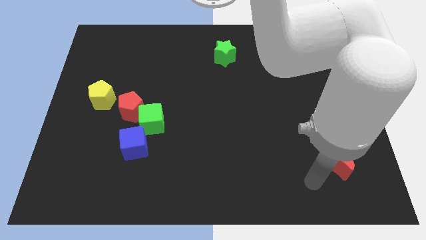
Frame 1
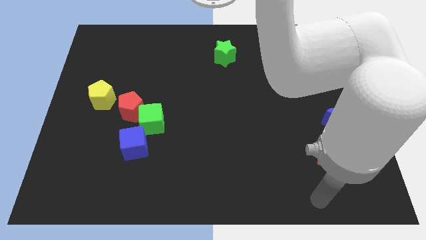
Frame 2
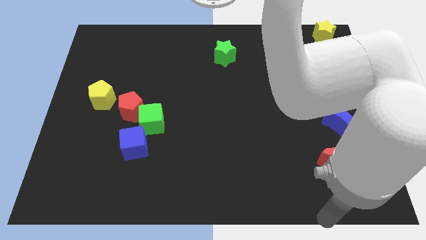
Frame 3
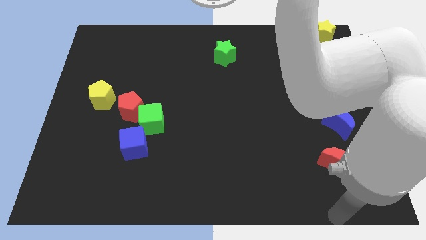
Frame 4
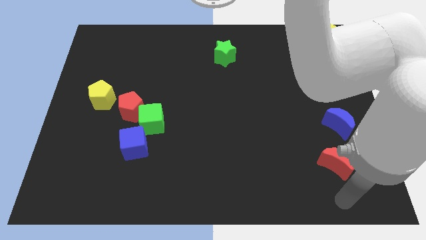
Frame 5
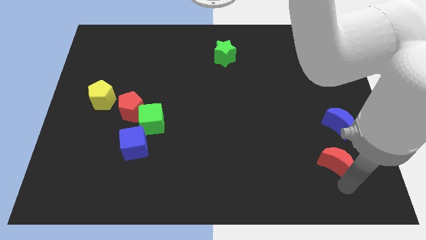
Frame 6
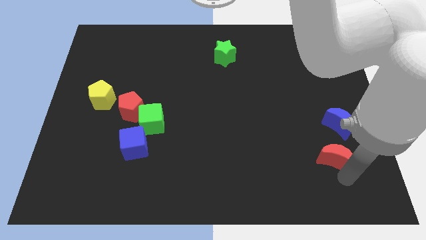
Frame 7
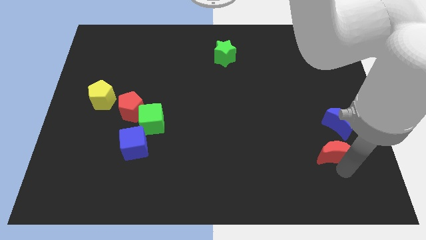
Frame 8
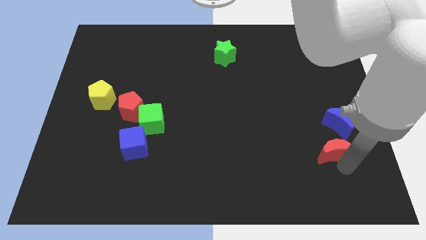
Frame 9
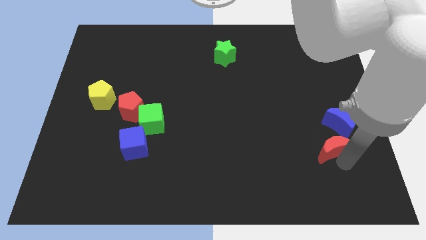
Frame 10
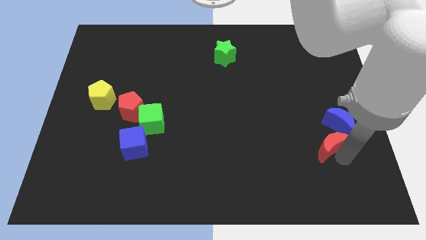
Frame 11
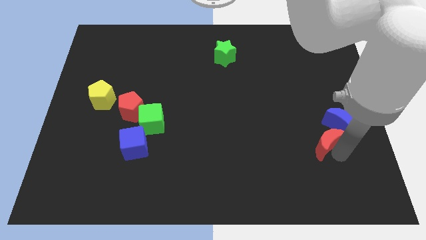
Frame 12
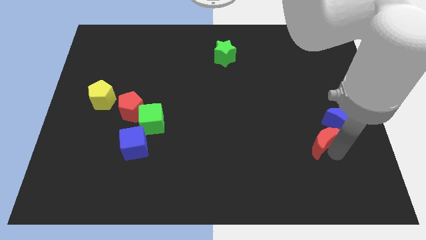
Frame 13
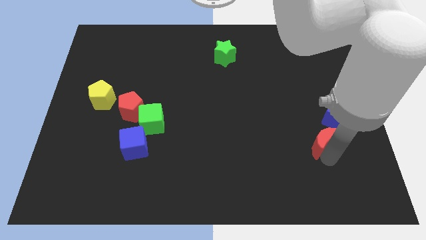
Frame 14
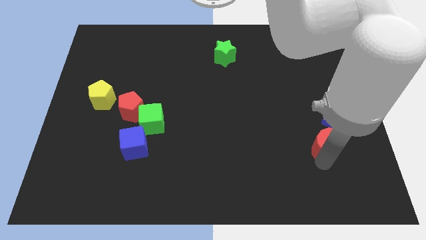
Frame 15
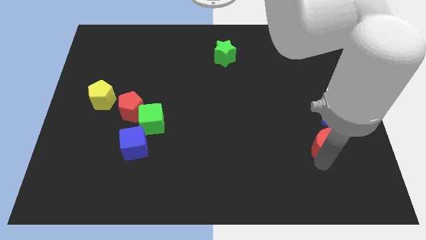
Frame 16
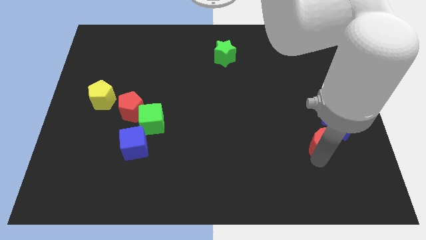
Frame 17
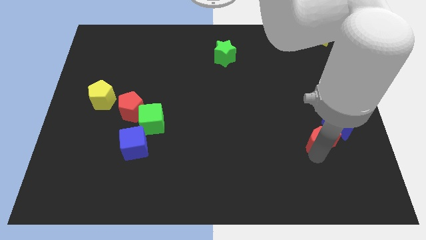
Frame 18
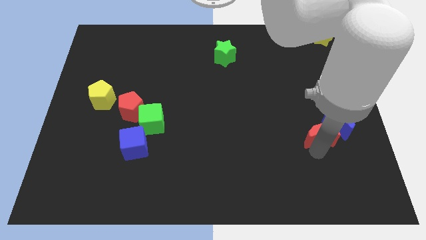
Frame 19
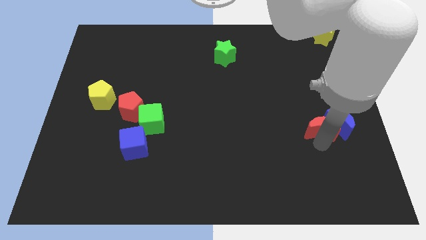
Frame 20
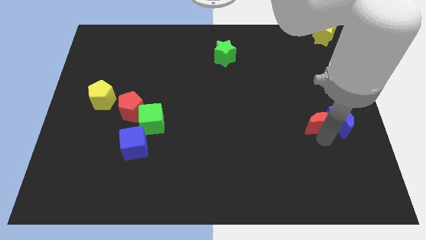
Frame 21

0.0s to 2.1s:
place the red moon left to the blue moon

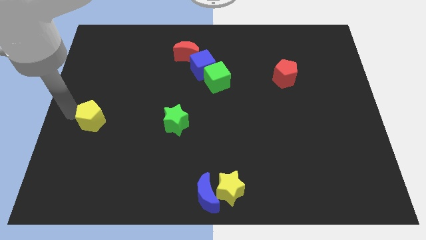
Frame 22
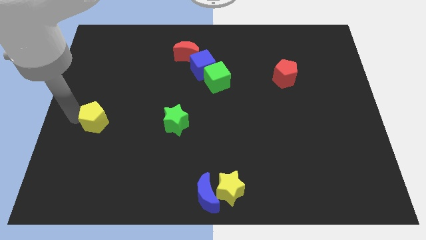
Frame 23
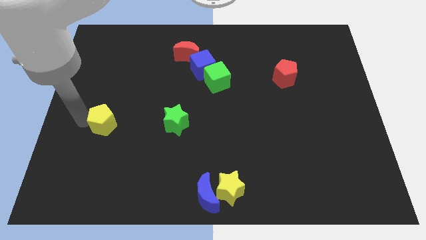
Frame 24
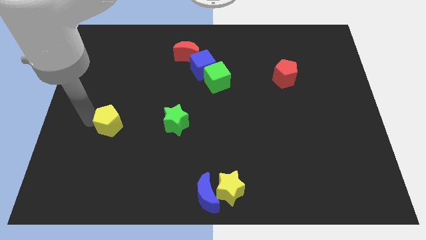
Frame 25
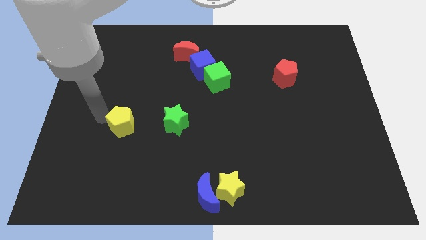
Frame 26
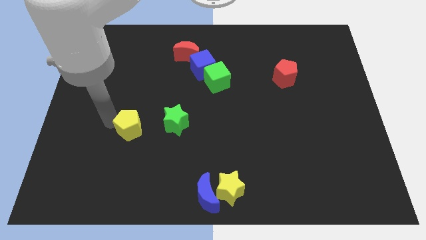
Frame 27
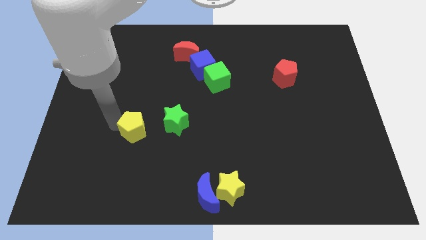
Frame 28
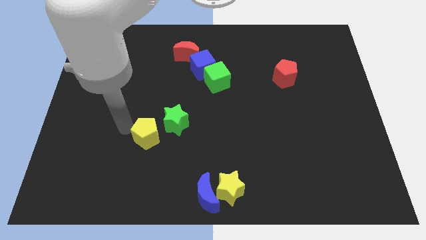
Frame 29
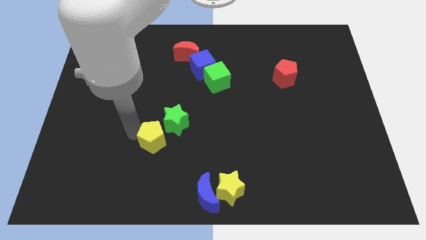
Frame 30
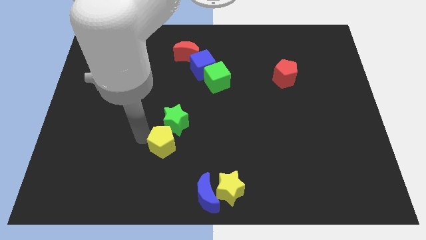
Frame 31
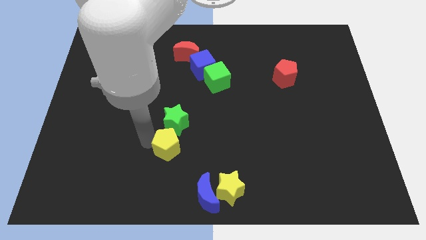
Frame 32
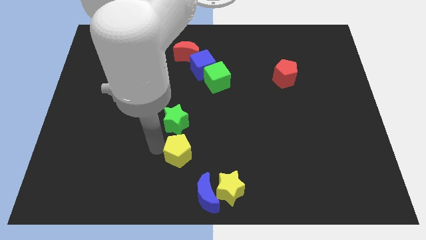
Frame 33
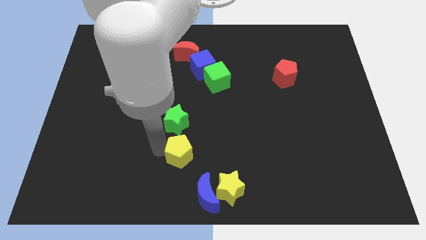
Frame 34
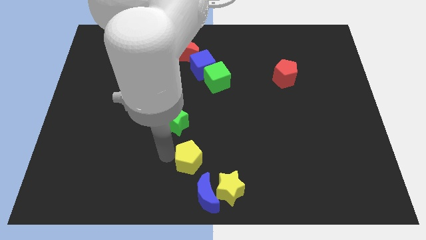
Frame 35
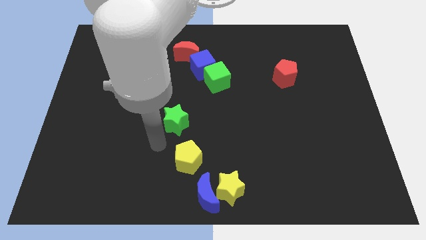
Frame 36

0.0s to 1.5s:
push the yellow pentagon towards the blue crescent

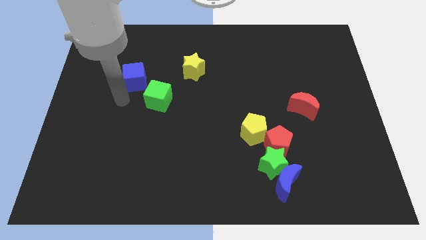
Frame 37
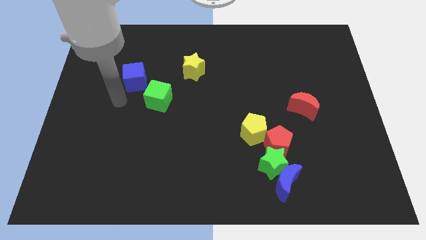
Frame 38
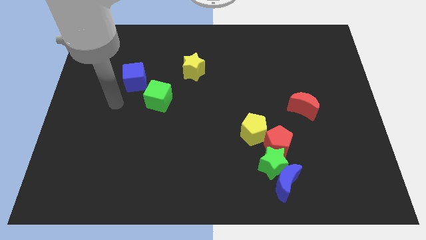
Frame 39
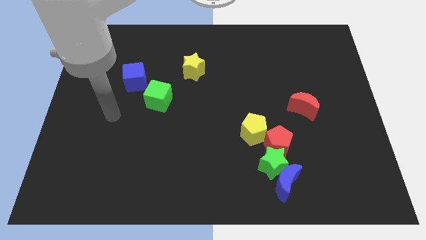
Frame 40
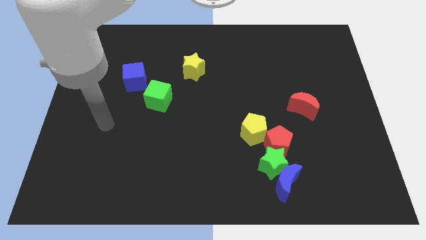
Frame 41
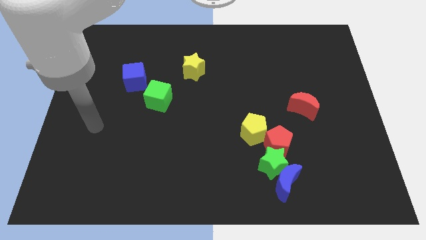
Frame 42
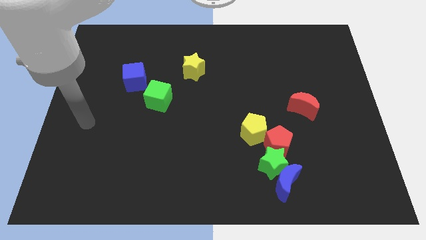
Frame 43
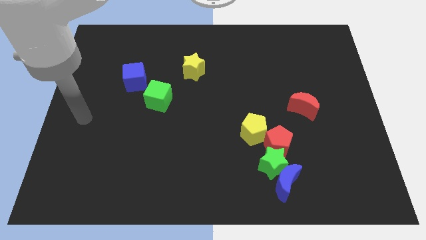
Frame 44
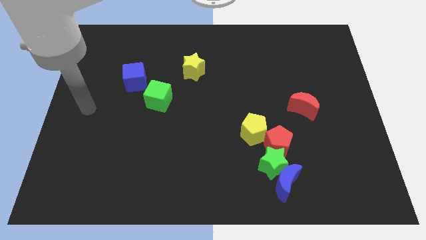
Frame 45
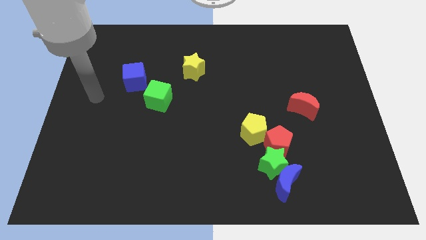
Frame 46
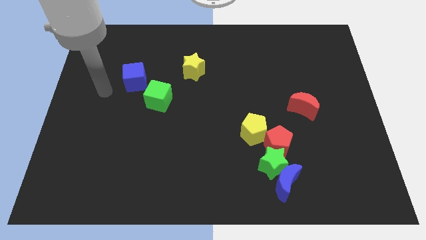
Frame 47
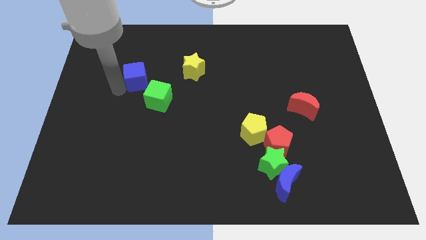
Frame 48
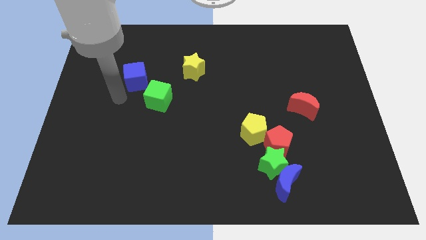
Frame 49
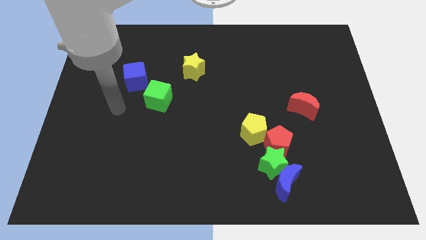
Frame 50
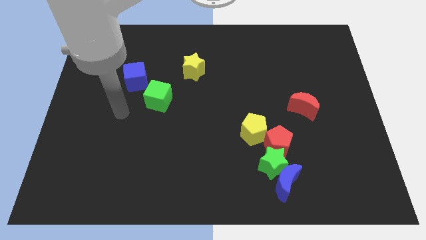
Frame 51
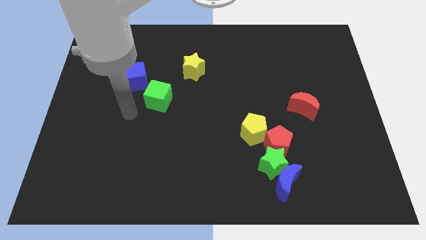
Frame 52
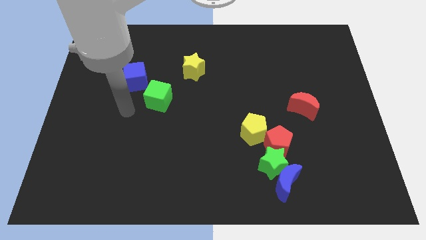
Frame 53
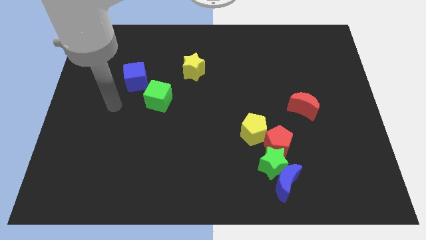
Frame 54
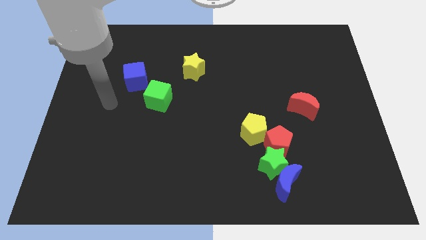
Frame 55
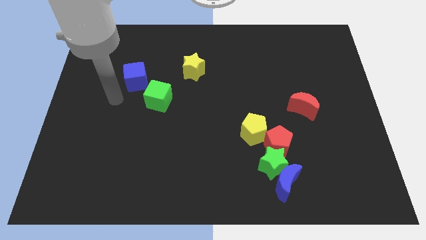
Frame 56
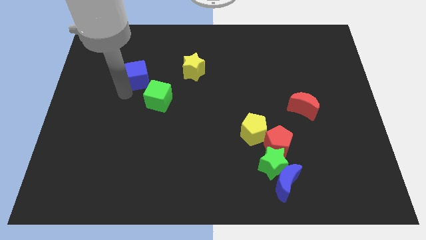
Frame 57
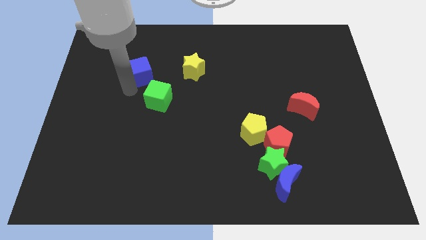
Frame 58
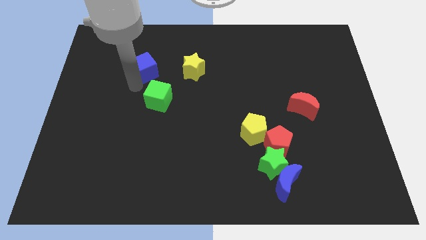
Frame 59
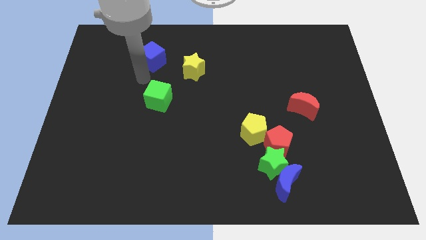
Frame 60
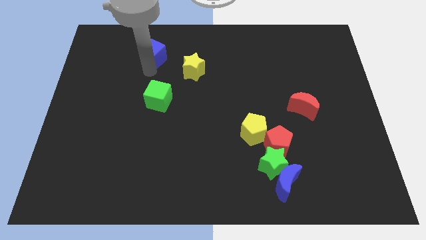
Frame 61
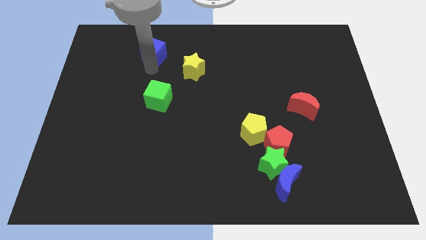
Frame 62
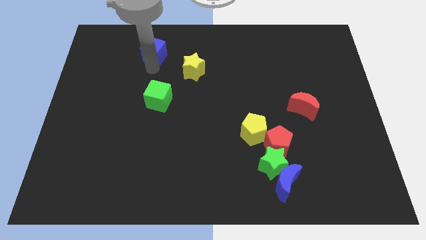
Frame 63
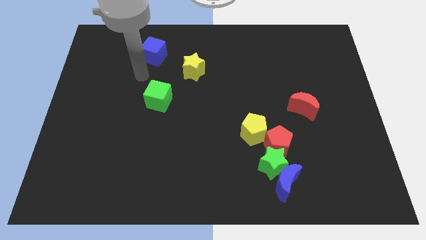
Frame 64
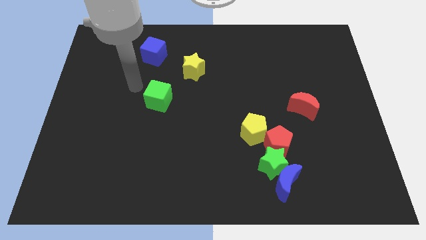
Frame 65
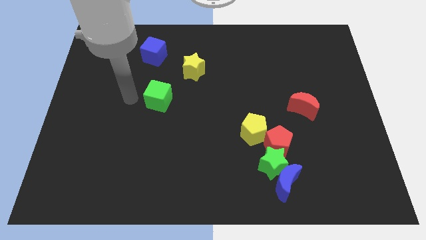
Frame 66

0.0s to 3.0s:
move the blue cube to the top of the green cube

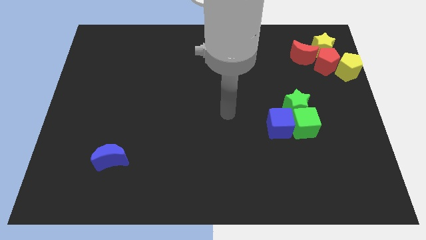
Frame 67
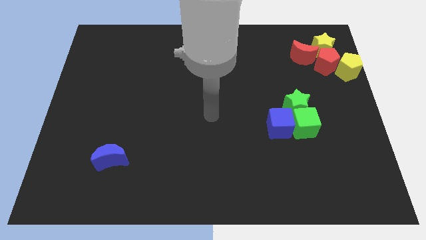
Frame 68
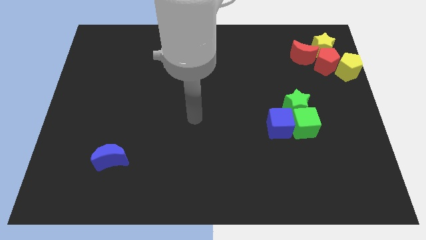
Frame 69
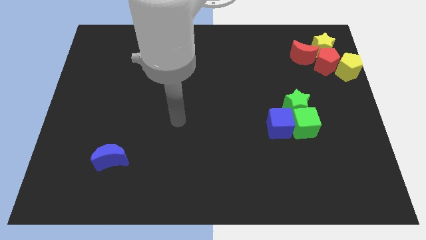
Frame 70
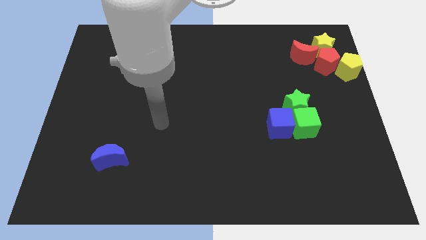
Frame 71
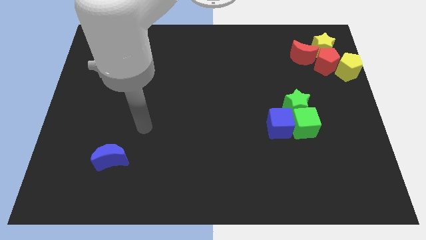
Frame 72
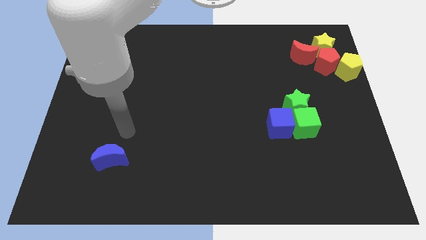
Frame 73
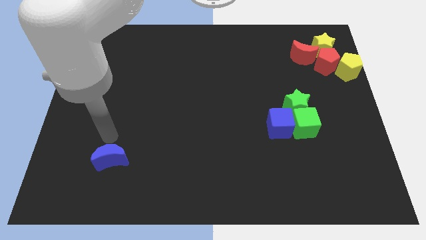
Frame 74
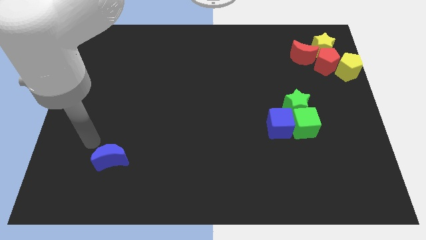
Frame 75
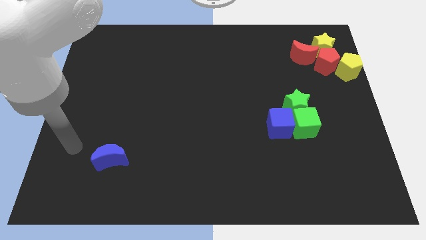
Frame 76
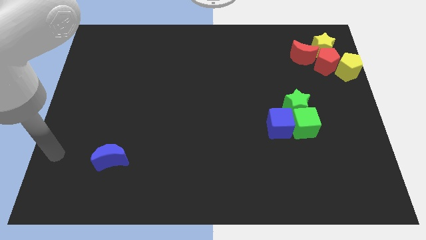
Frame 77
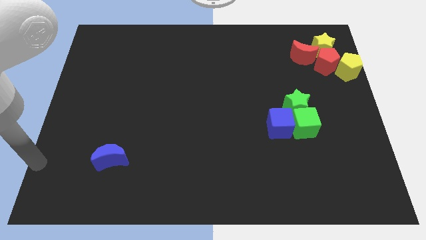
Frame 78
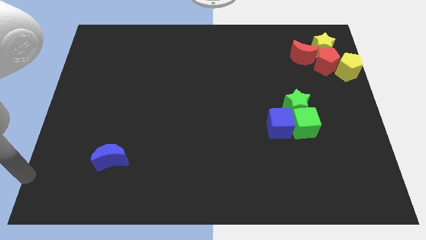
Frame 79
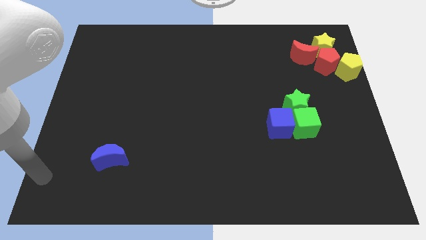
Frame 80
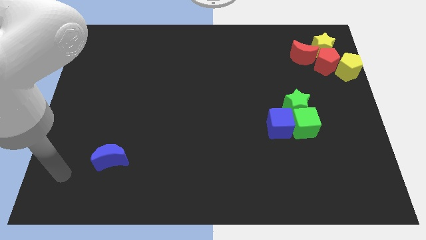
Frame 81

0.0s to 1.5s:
move your arm towards the blue crescent

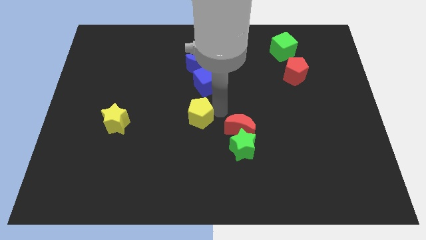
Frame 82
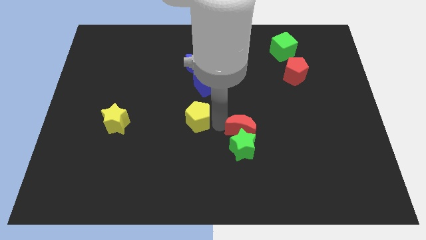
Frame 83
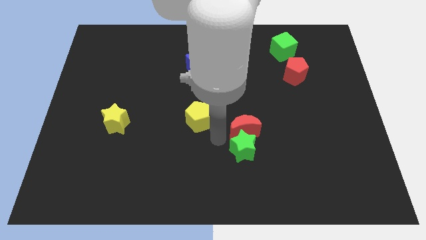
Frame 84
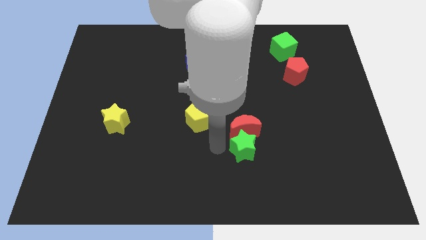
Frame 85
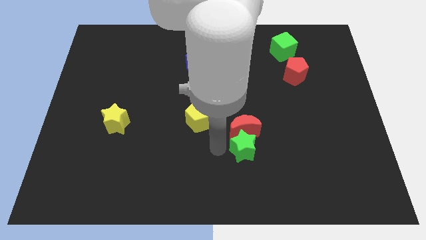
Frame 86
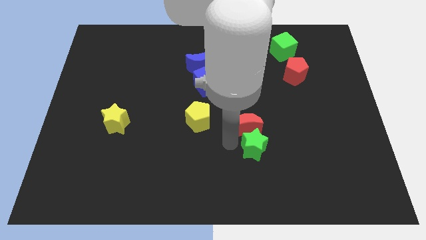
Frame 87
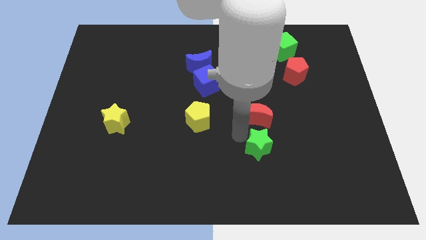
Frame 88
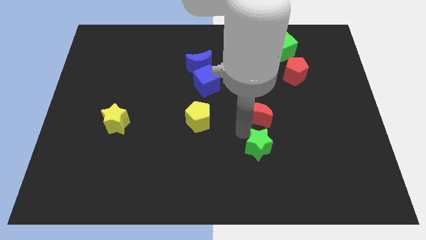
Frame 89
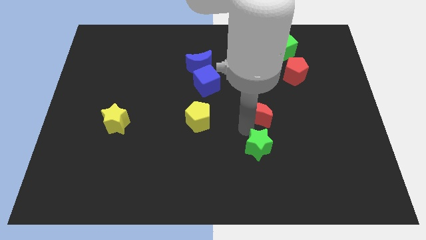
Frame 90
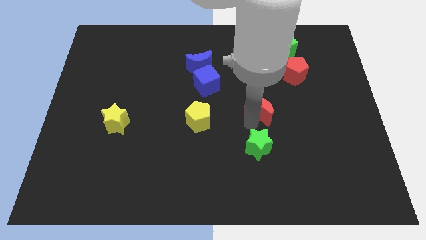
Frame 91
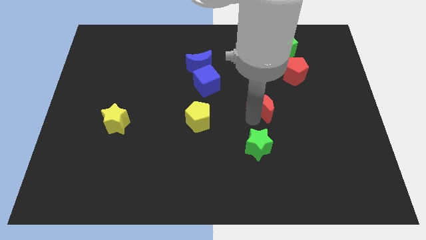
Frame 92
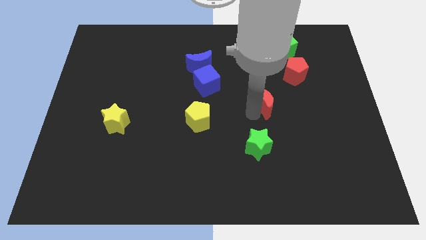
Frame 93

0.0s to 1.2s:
separate the red moon from green star
